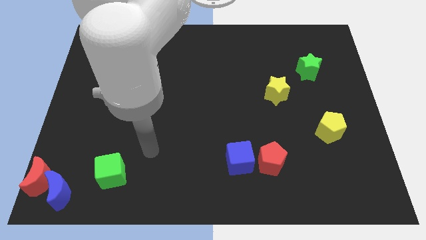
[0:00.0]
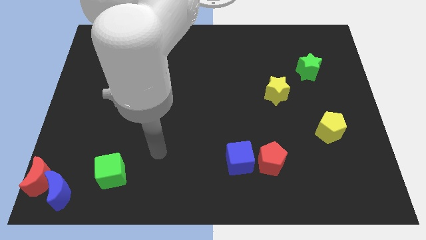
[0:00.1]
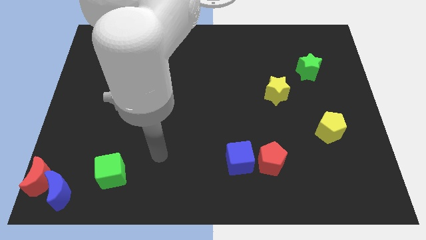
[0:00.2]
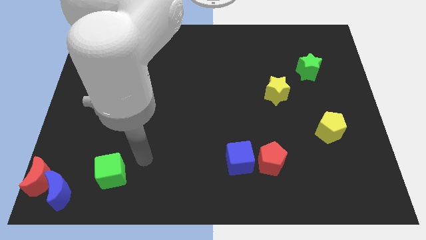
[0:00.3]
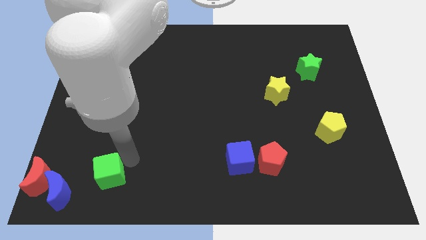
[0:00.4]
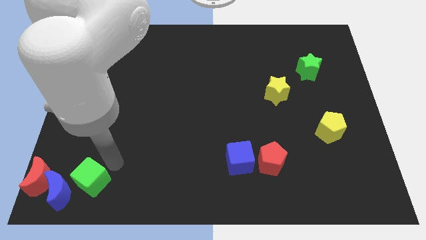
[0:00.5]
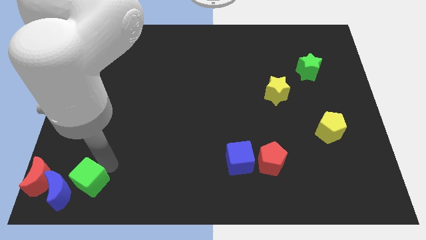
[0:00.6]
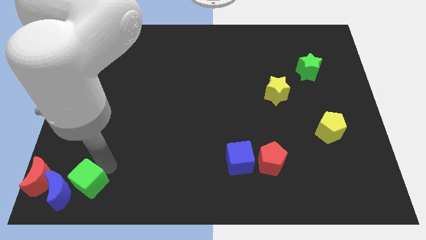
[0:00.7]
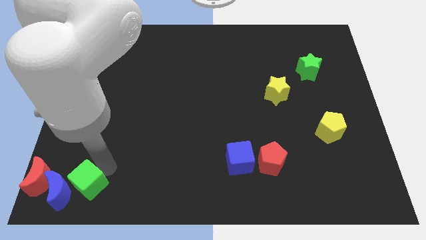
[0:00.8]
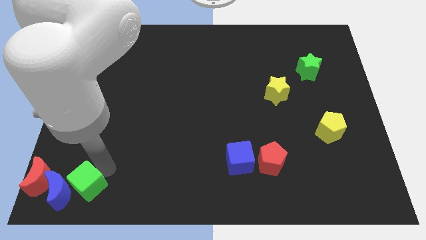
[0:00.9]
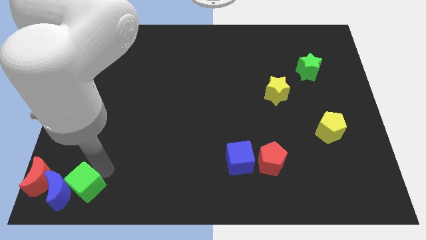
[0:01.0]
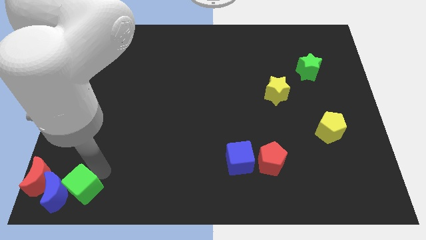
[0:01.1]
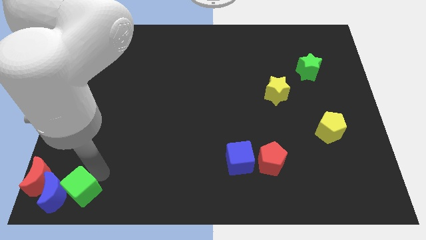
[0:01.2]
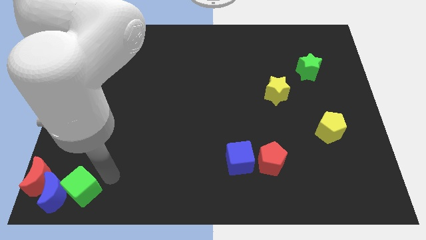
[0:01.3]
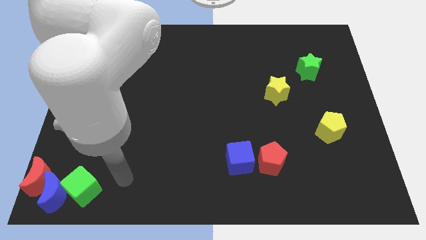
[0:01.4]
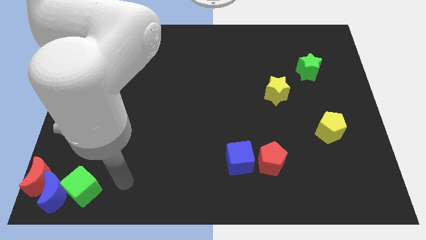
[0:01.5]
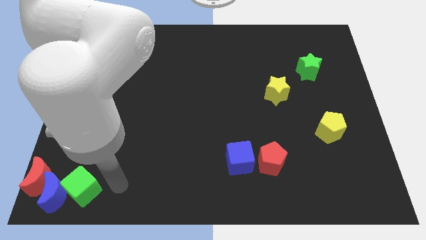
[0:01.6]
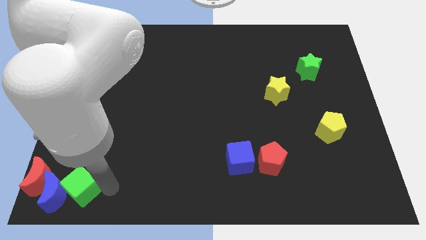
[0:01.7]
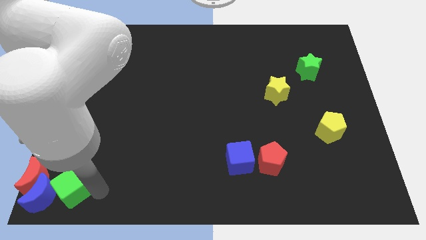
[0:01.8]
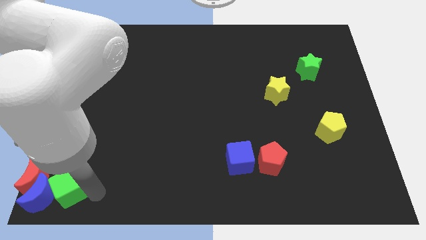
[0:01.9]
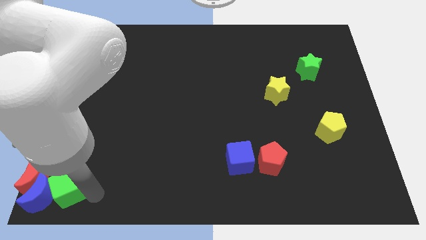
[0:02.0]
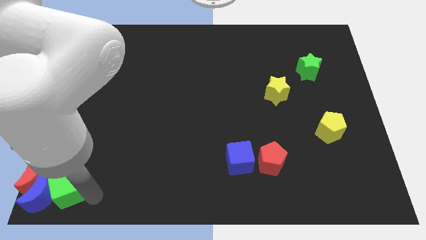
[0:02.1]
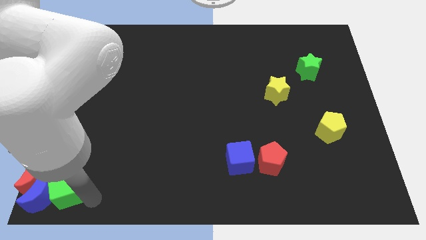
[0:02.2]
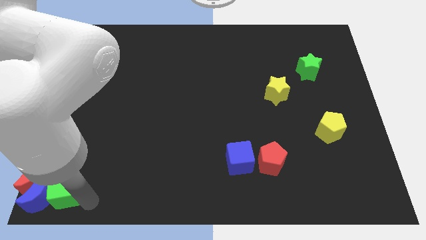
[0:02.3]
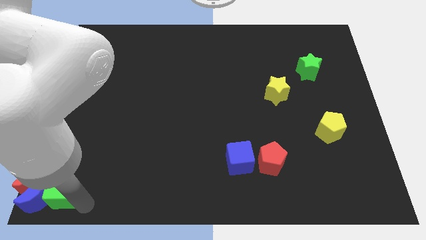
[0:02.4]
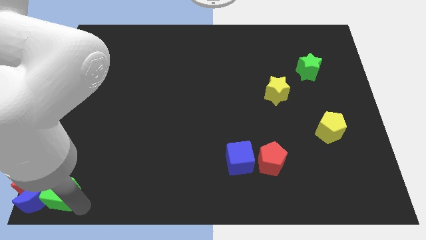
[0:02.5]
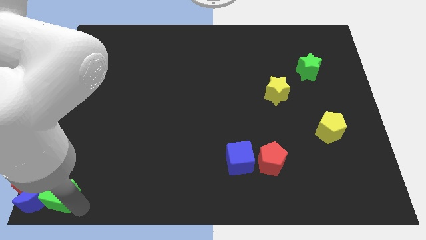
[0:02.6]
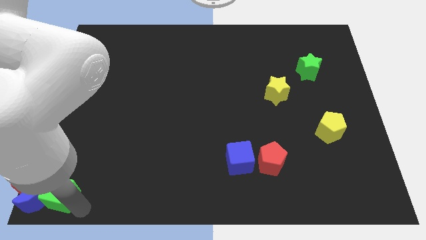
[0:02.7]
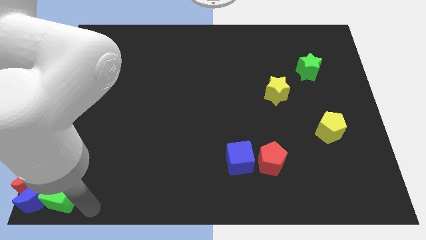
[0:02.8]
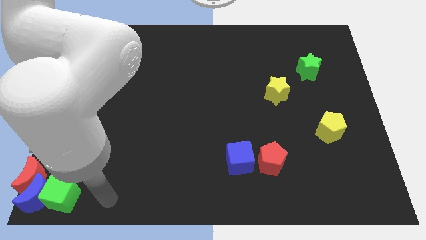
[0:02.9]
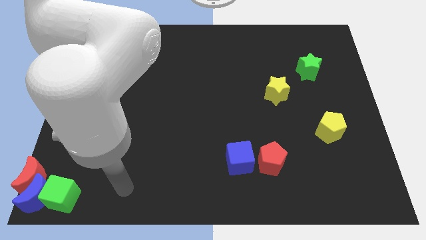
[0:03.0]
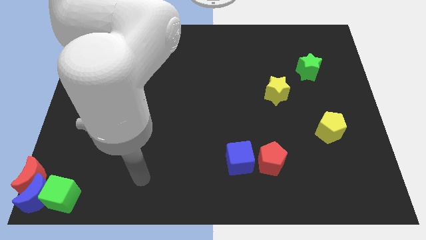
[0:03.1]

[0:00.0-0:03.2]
move the green cube right to the blue crescent

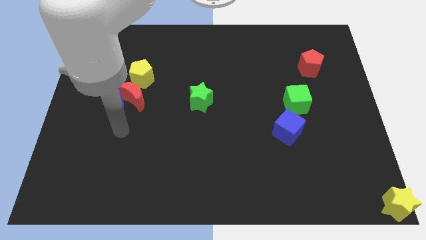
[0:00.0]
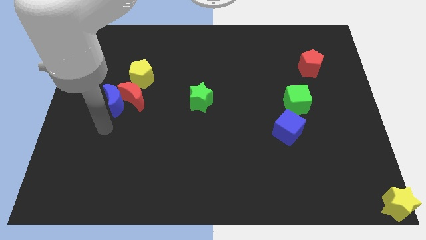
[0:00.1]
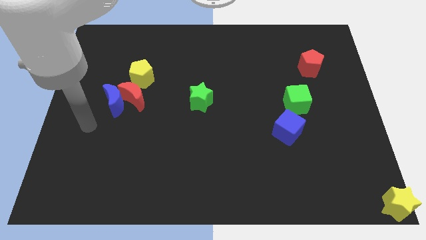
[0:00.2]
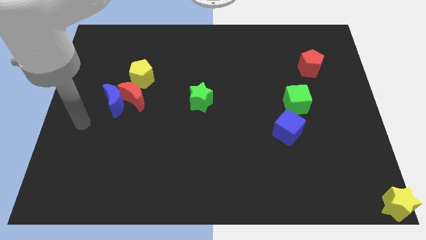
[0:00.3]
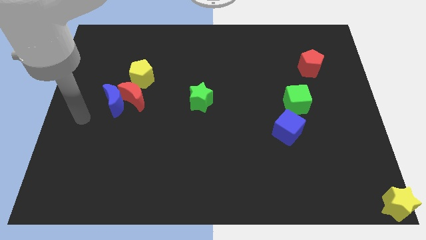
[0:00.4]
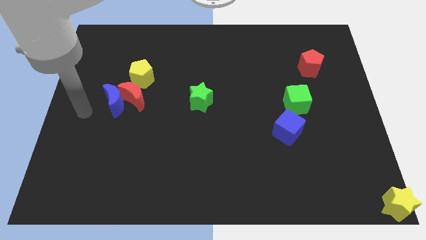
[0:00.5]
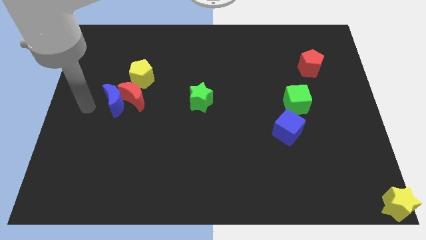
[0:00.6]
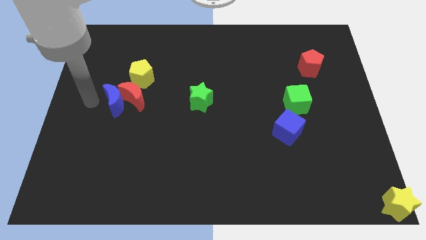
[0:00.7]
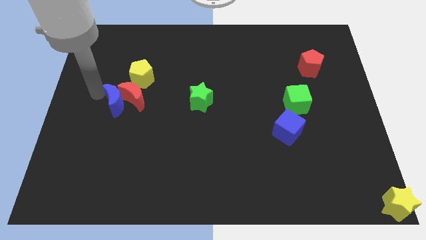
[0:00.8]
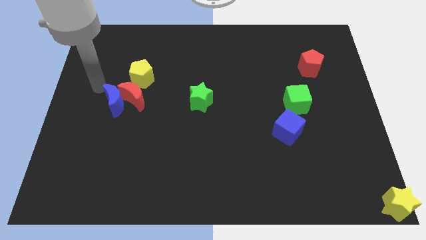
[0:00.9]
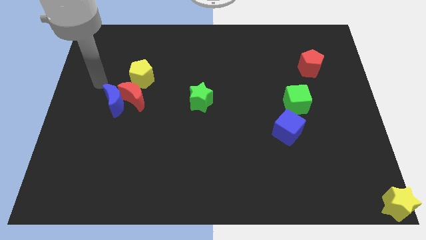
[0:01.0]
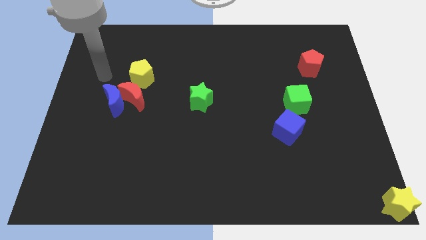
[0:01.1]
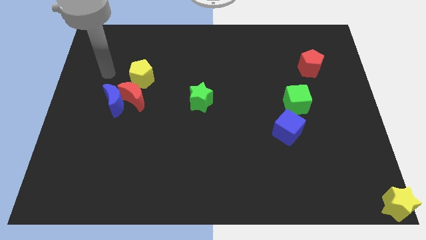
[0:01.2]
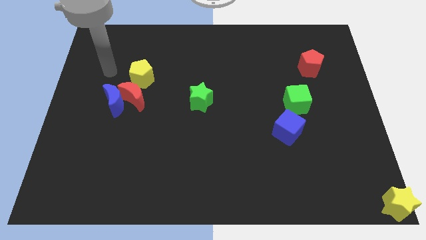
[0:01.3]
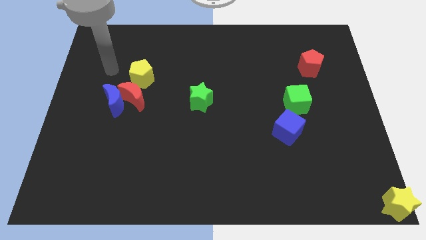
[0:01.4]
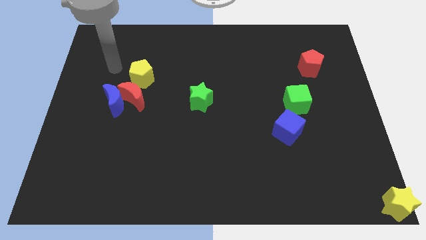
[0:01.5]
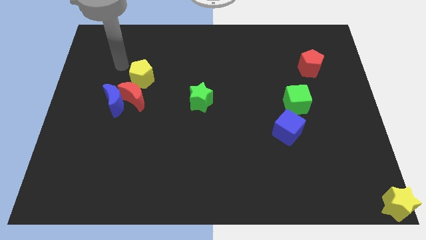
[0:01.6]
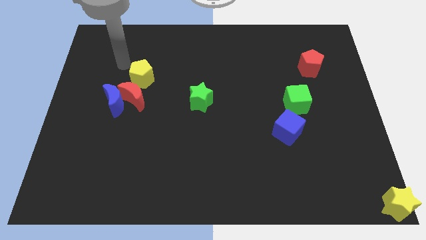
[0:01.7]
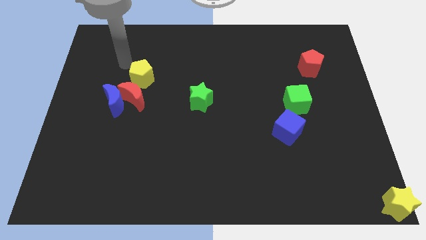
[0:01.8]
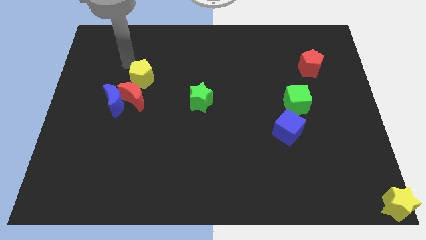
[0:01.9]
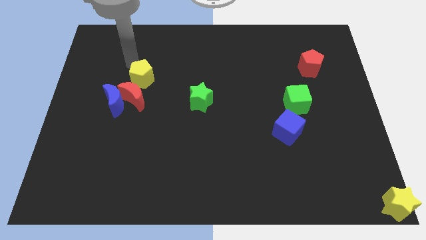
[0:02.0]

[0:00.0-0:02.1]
move the arm towards the yellow pentagon

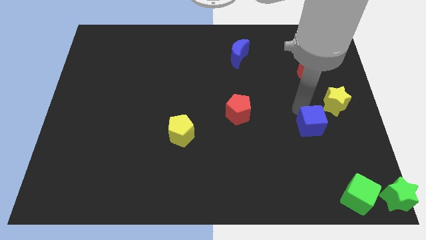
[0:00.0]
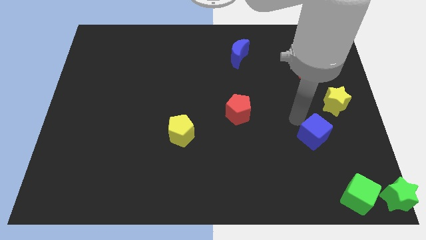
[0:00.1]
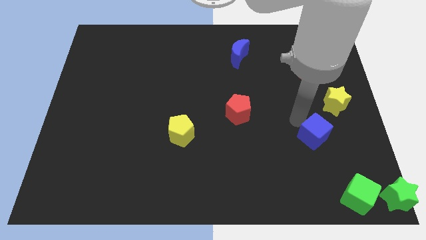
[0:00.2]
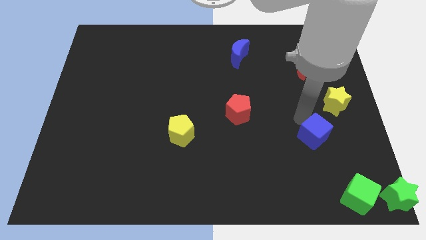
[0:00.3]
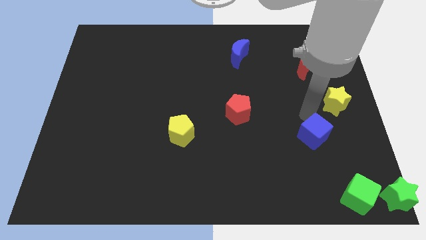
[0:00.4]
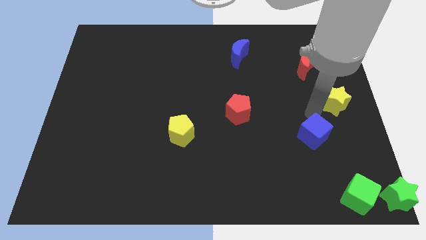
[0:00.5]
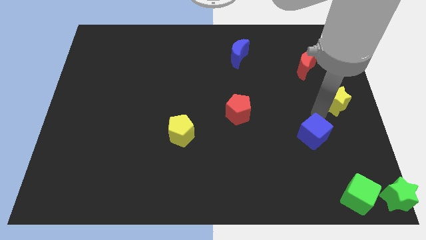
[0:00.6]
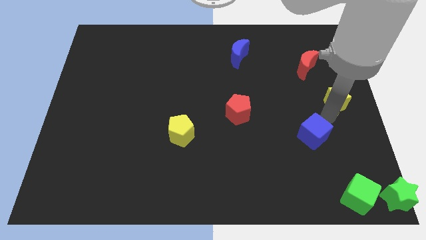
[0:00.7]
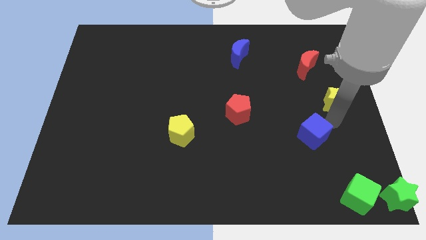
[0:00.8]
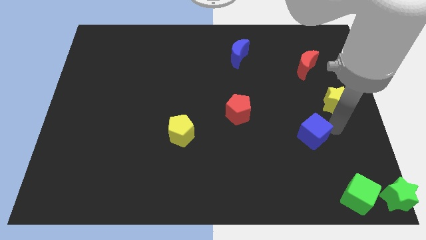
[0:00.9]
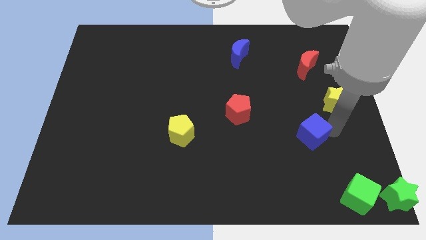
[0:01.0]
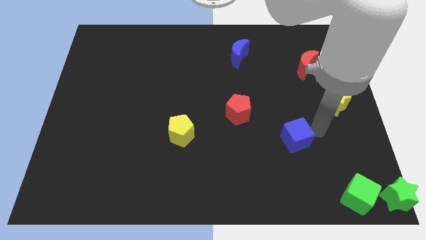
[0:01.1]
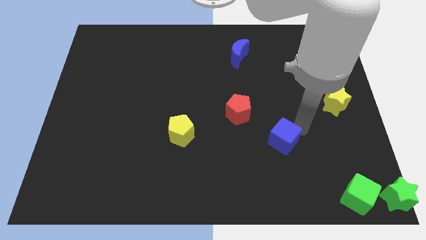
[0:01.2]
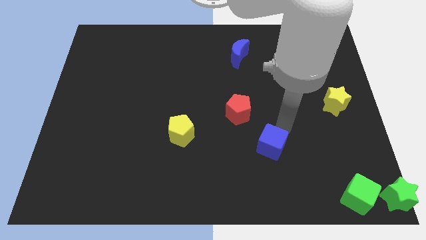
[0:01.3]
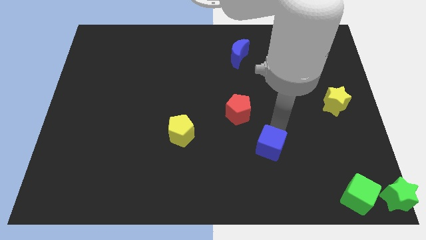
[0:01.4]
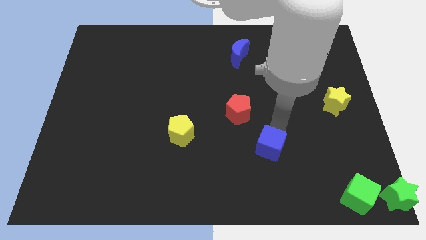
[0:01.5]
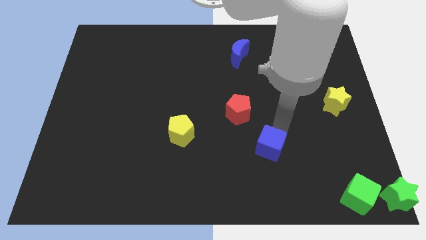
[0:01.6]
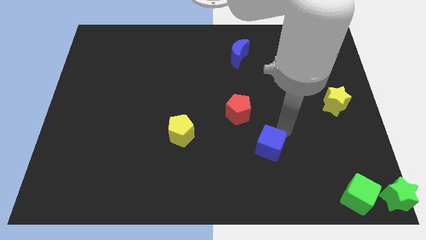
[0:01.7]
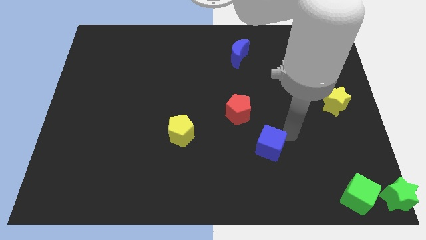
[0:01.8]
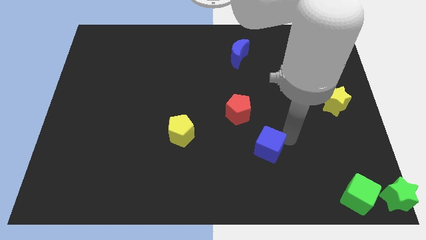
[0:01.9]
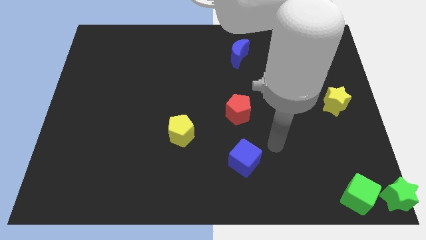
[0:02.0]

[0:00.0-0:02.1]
place the blue cube under the red pentagon

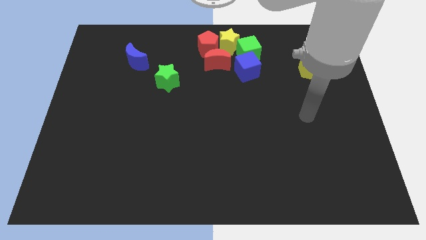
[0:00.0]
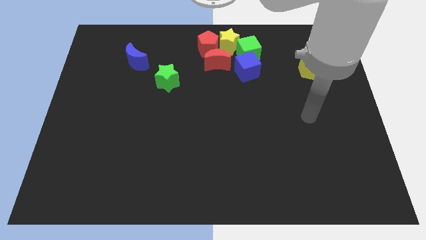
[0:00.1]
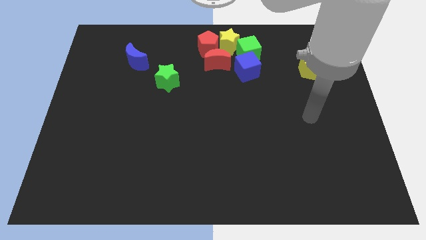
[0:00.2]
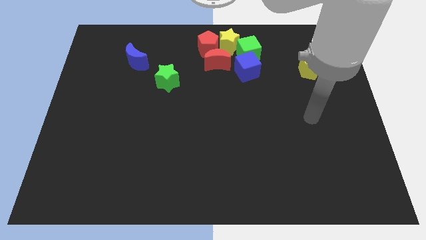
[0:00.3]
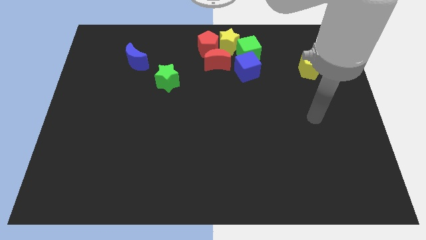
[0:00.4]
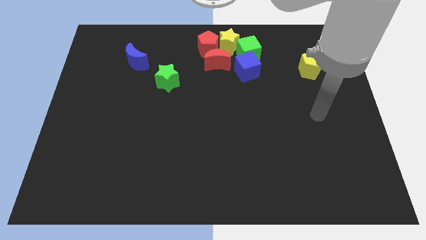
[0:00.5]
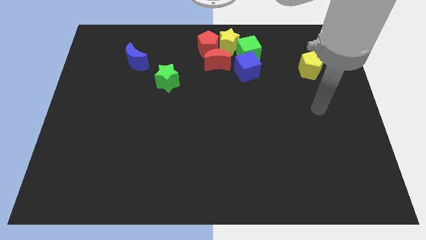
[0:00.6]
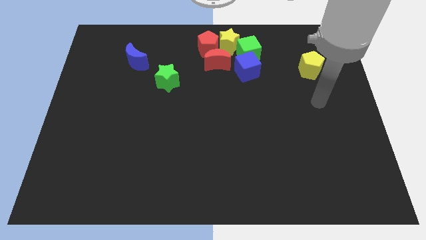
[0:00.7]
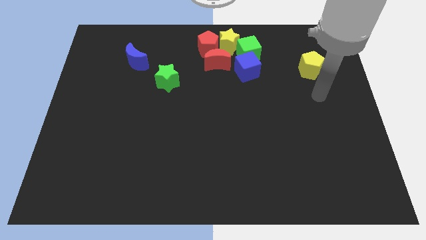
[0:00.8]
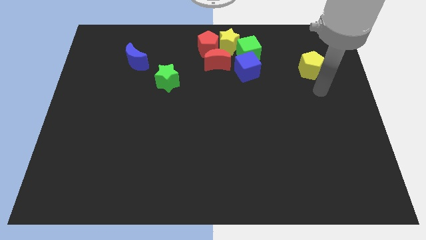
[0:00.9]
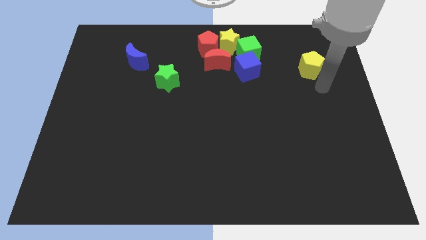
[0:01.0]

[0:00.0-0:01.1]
move your hand to the bottom of the yellow star

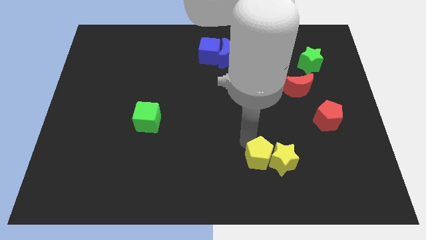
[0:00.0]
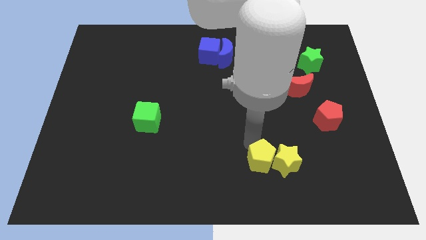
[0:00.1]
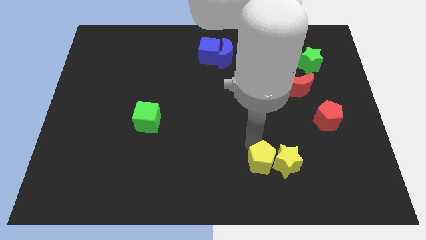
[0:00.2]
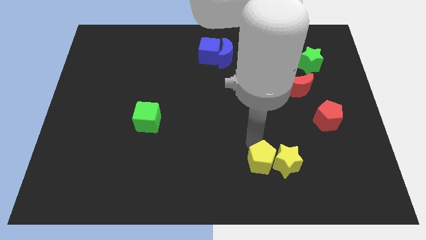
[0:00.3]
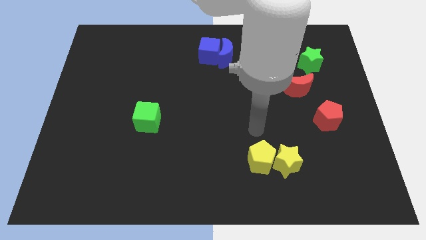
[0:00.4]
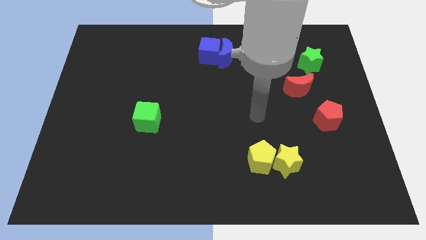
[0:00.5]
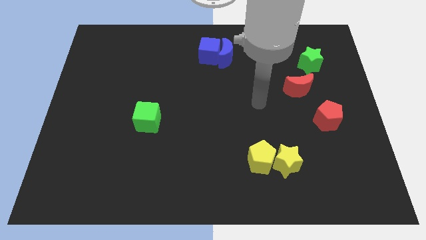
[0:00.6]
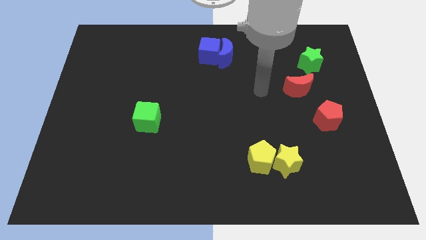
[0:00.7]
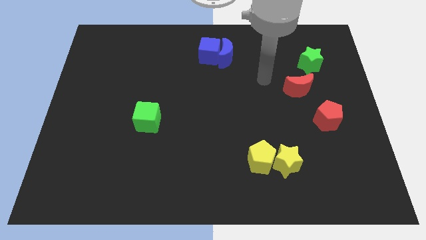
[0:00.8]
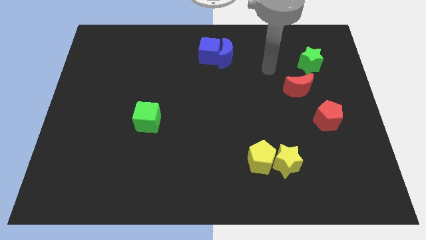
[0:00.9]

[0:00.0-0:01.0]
slightly adjust the yellow pentagon and yellow star to the downwards
